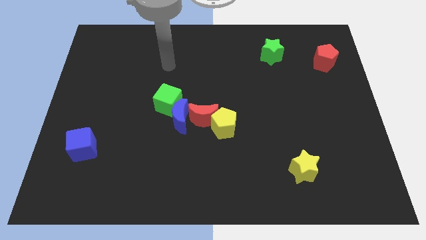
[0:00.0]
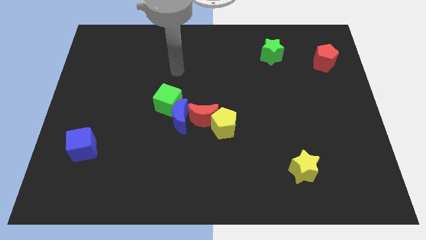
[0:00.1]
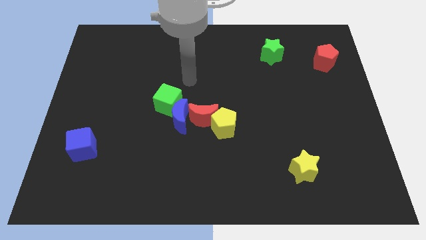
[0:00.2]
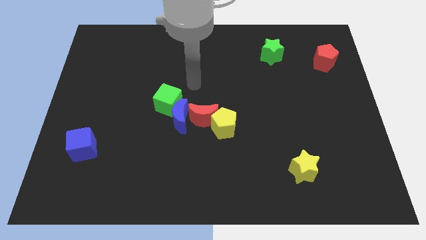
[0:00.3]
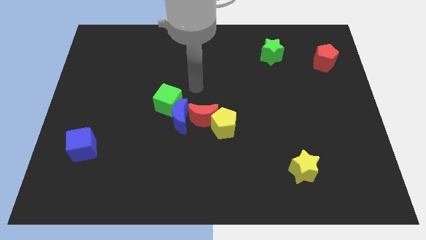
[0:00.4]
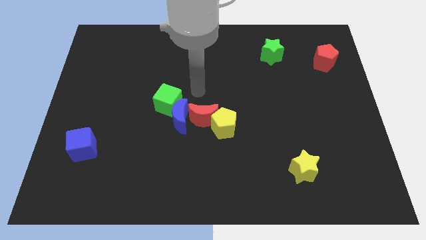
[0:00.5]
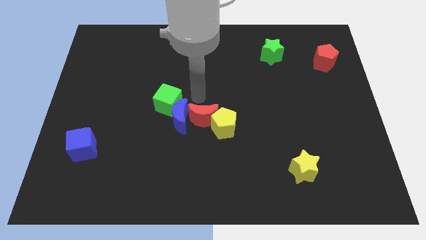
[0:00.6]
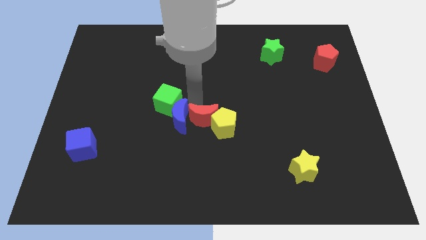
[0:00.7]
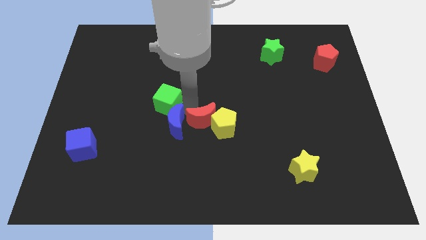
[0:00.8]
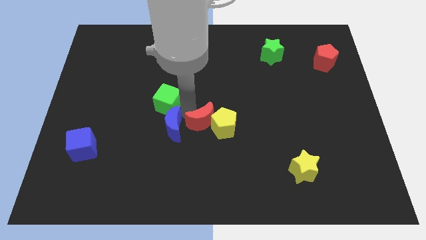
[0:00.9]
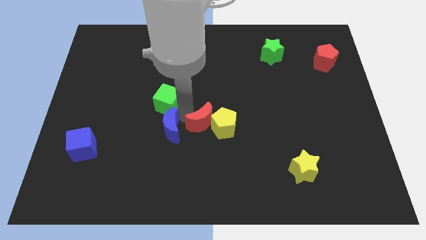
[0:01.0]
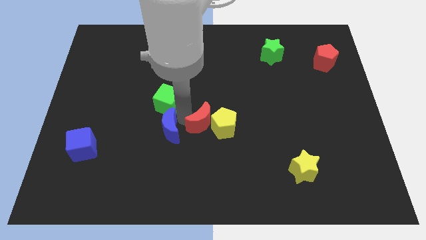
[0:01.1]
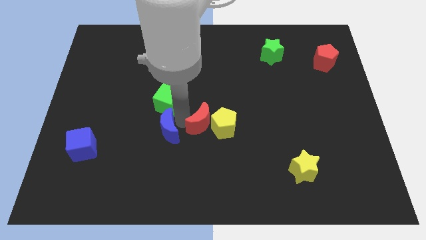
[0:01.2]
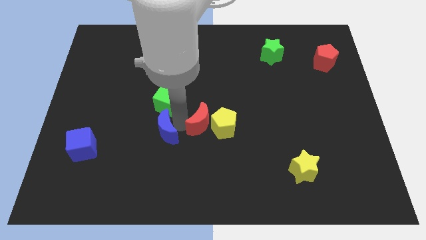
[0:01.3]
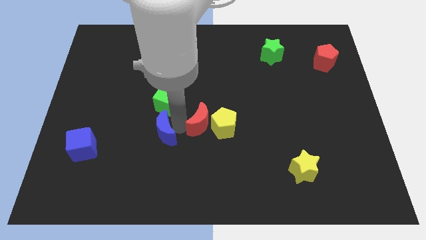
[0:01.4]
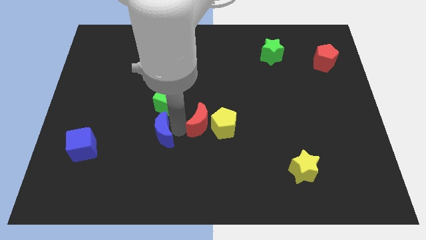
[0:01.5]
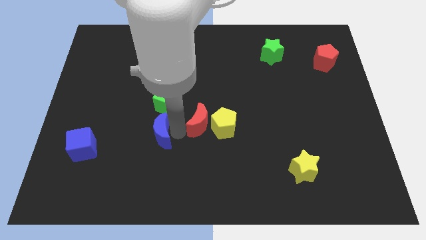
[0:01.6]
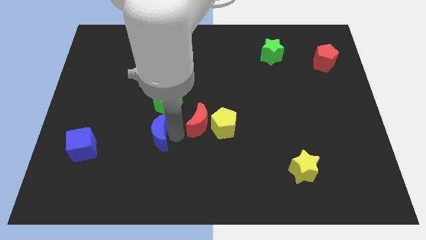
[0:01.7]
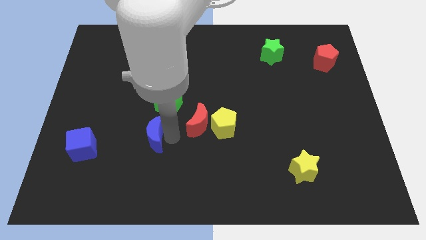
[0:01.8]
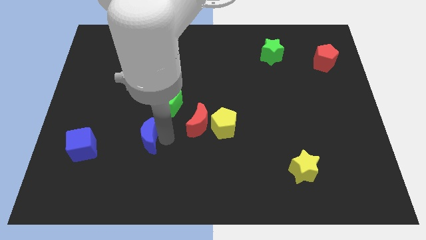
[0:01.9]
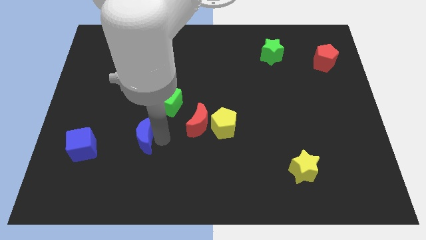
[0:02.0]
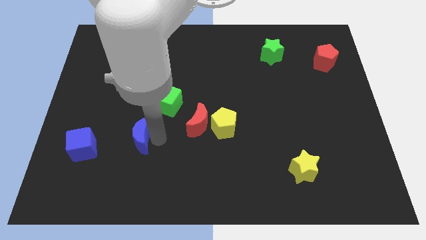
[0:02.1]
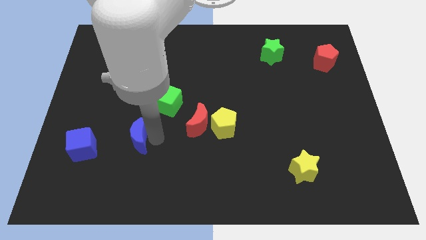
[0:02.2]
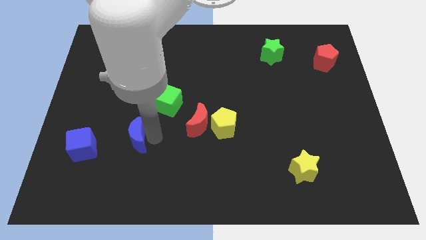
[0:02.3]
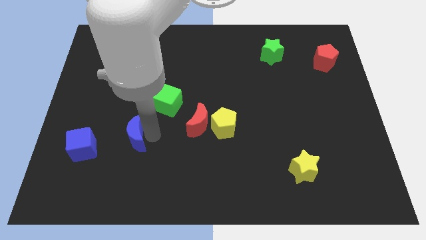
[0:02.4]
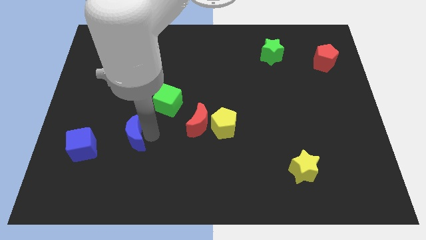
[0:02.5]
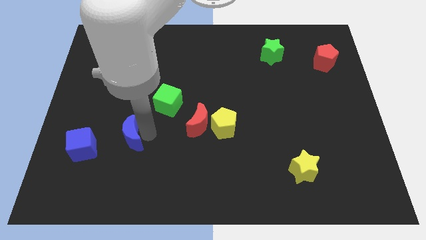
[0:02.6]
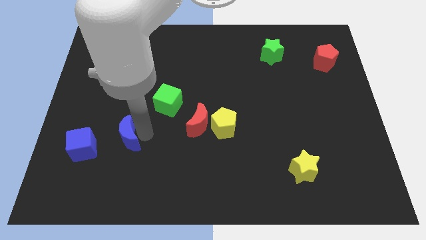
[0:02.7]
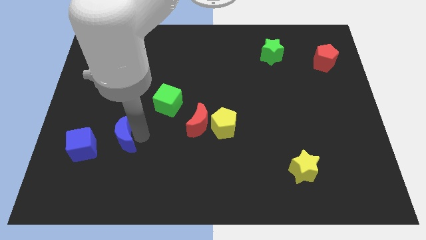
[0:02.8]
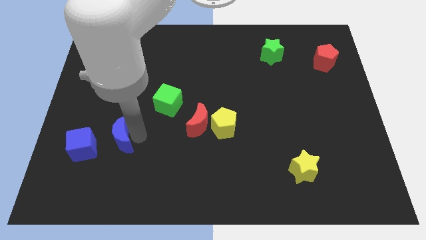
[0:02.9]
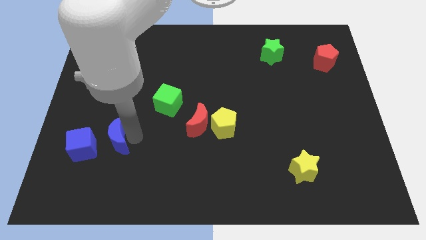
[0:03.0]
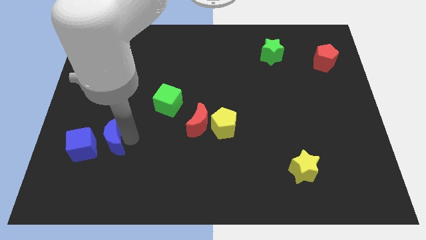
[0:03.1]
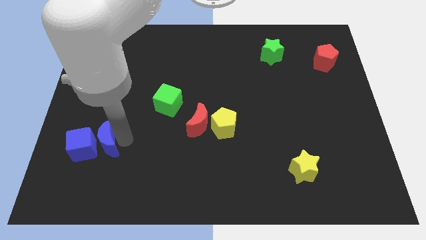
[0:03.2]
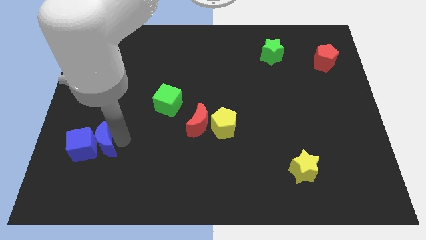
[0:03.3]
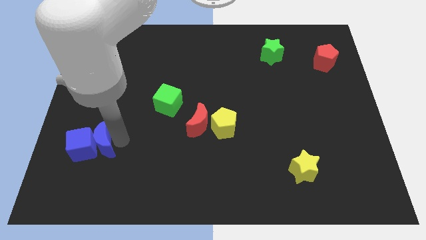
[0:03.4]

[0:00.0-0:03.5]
put the blue moon to the blue cube

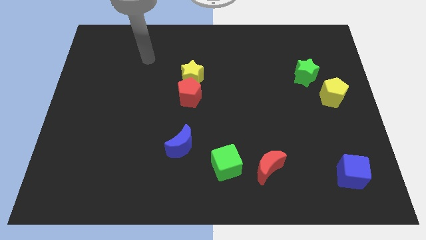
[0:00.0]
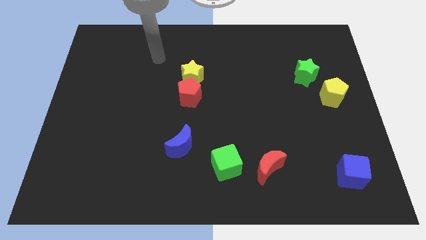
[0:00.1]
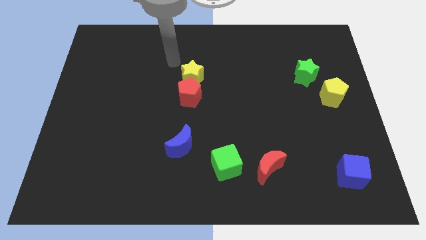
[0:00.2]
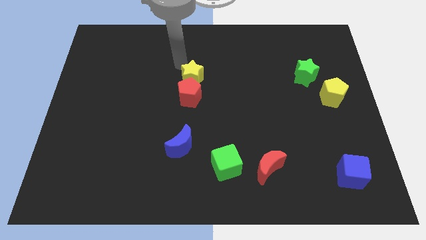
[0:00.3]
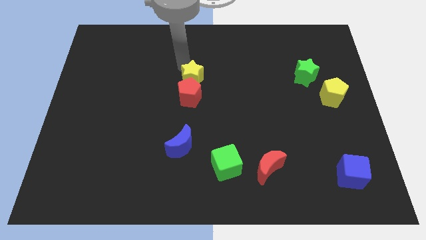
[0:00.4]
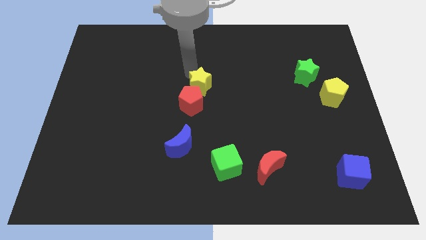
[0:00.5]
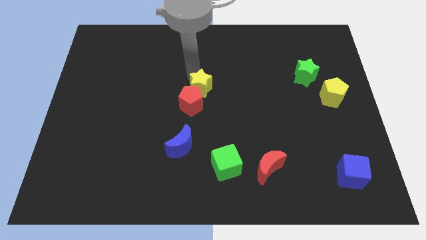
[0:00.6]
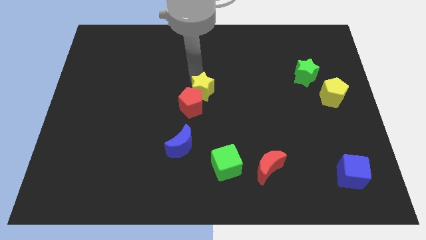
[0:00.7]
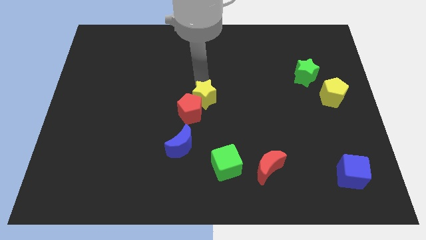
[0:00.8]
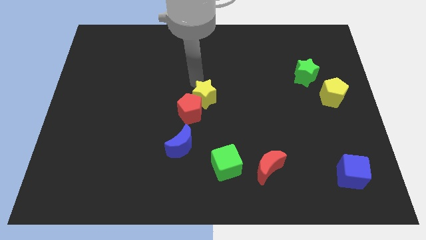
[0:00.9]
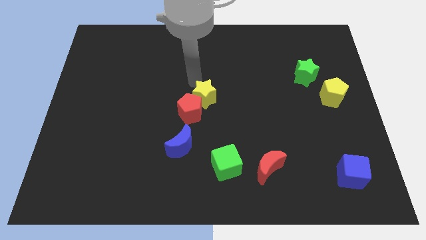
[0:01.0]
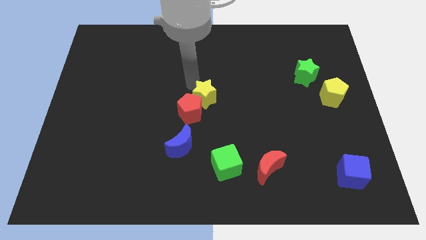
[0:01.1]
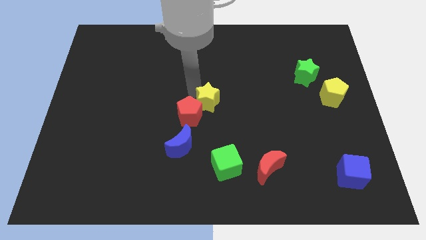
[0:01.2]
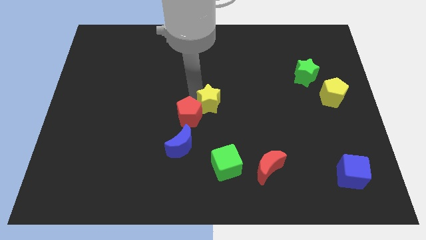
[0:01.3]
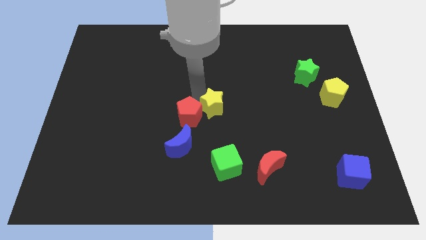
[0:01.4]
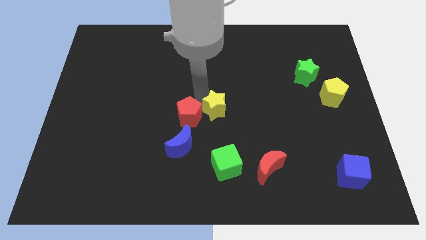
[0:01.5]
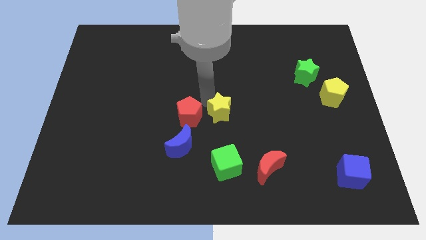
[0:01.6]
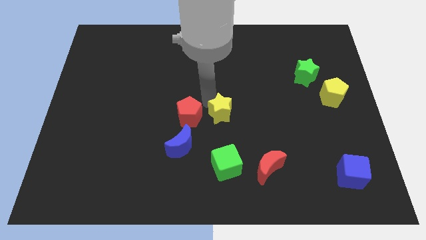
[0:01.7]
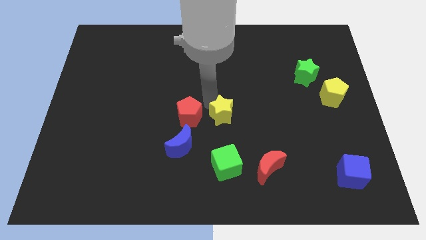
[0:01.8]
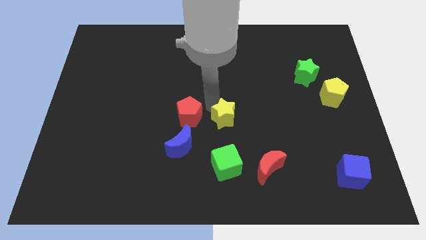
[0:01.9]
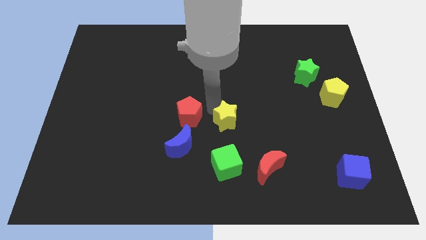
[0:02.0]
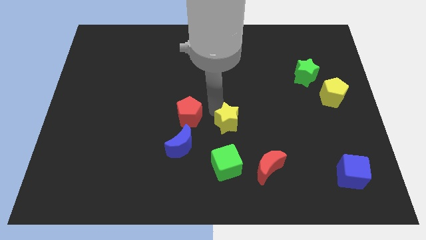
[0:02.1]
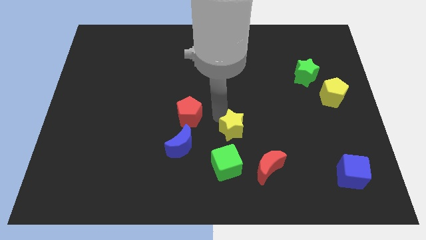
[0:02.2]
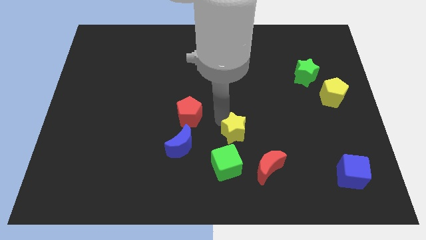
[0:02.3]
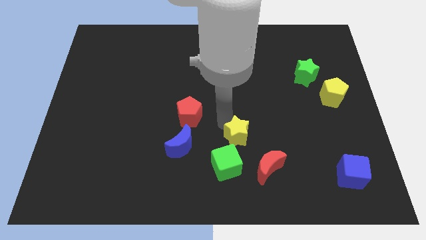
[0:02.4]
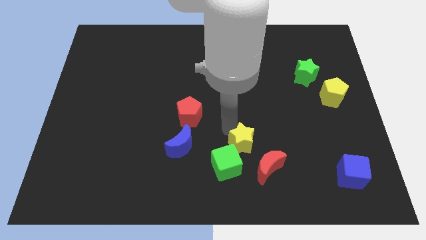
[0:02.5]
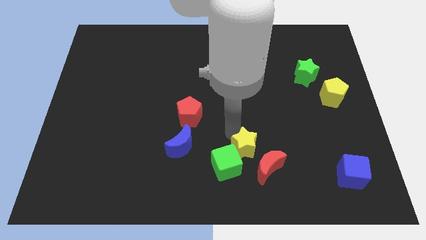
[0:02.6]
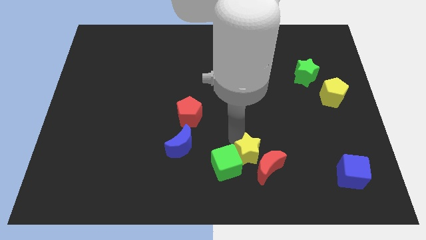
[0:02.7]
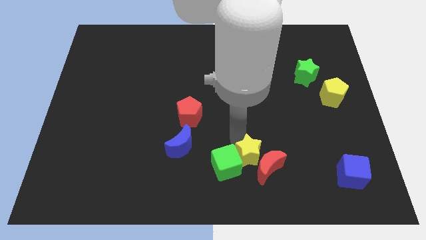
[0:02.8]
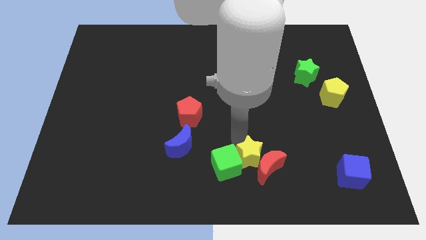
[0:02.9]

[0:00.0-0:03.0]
move the yellow star towards the red moon

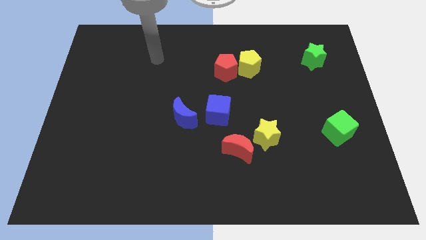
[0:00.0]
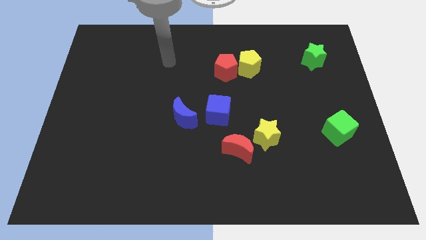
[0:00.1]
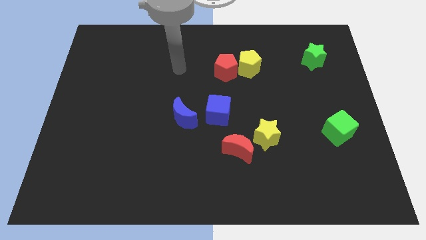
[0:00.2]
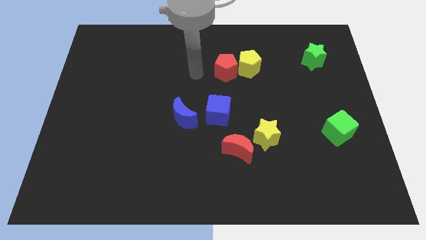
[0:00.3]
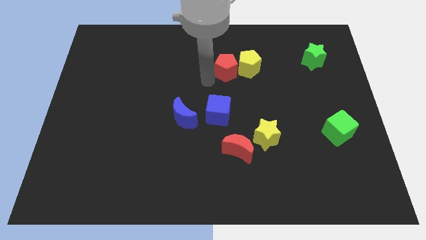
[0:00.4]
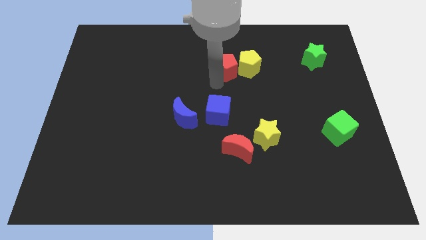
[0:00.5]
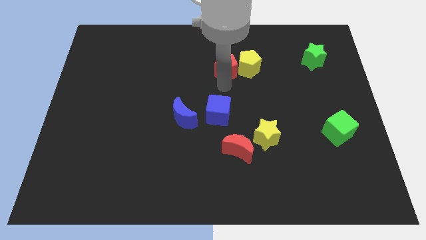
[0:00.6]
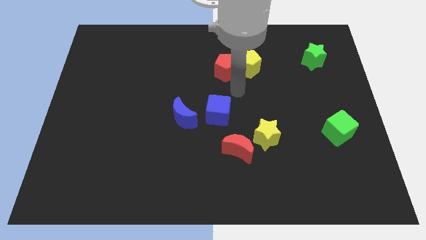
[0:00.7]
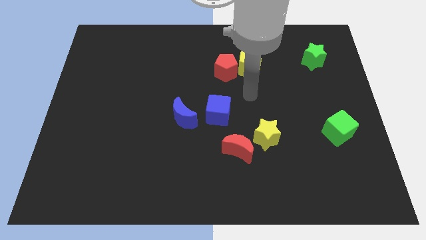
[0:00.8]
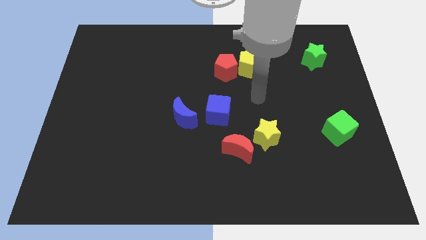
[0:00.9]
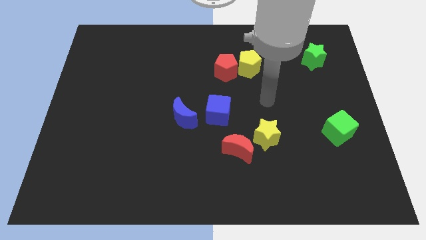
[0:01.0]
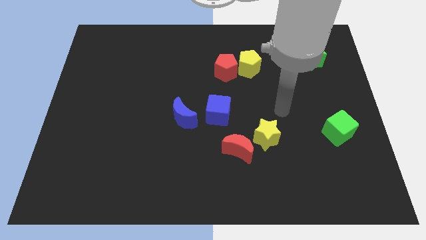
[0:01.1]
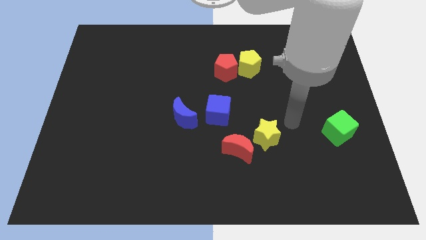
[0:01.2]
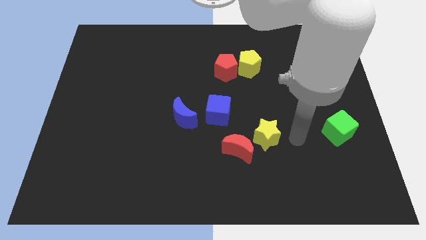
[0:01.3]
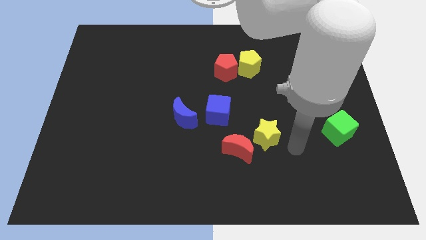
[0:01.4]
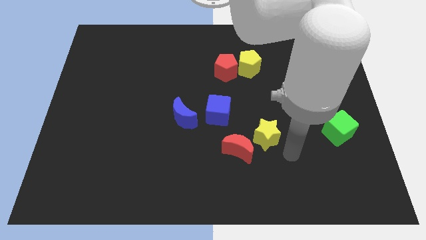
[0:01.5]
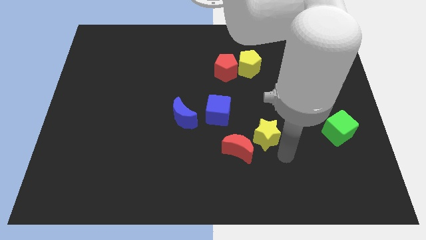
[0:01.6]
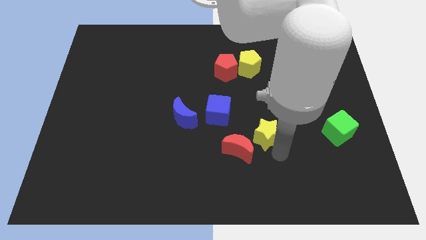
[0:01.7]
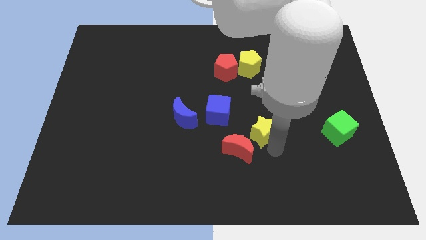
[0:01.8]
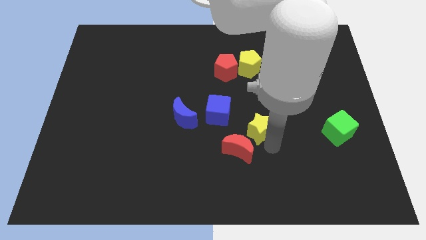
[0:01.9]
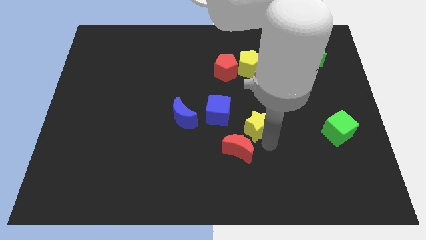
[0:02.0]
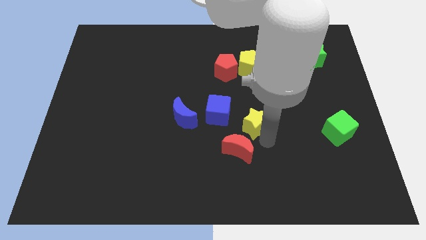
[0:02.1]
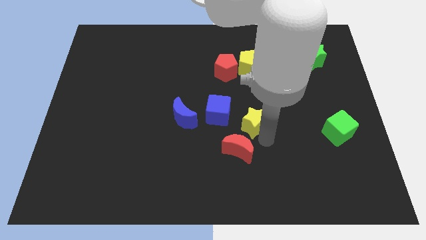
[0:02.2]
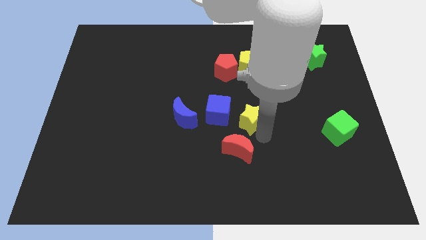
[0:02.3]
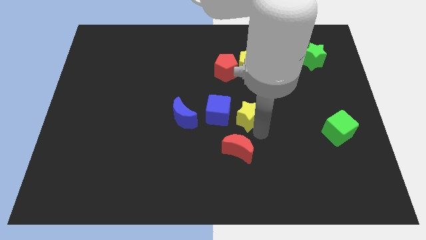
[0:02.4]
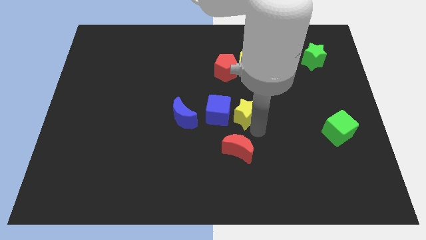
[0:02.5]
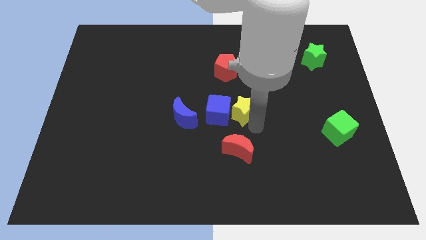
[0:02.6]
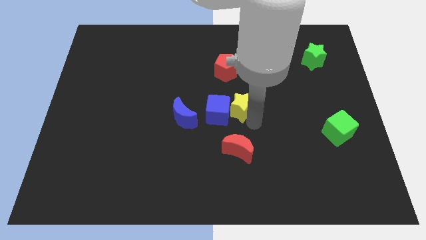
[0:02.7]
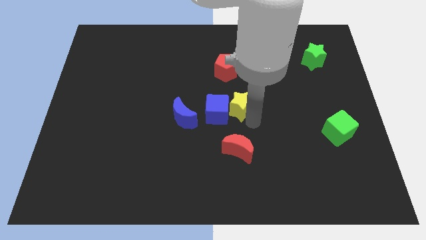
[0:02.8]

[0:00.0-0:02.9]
slide the yellow star close to the blue cube
